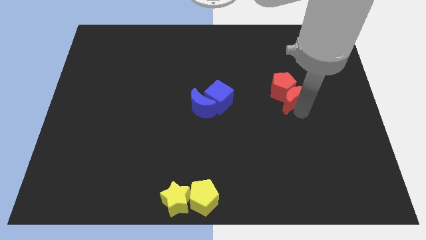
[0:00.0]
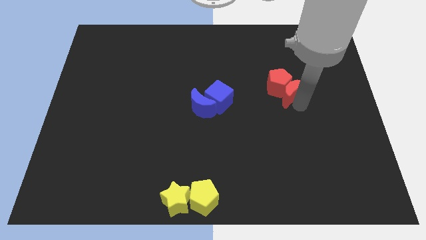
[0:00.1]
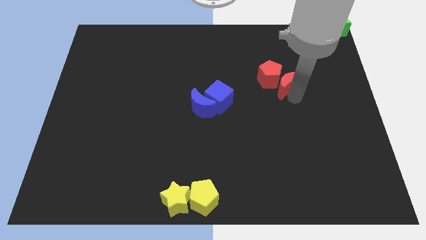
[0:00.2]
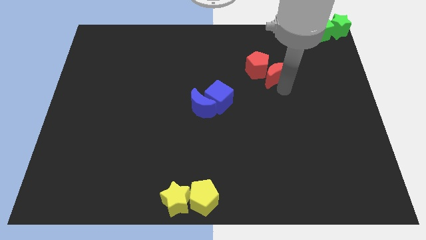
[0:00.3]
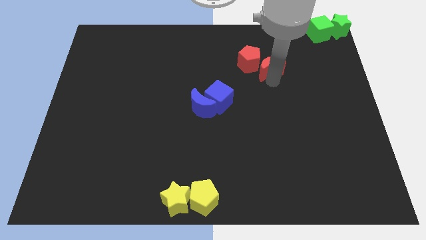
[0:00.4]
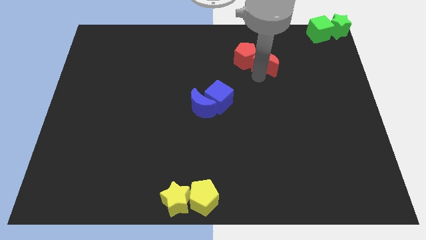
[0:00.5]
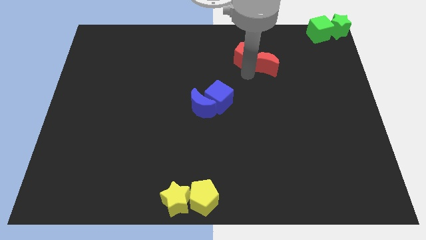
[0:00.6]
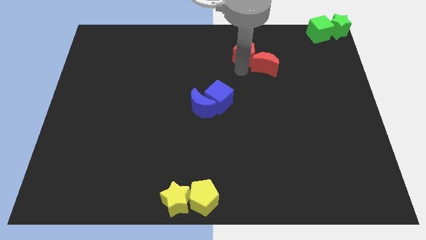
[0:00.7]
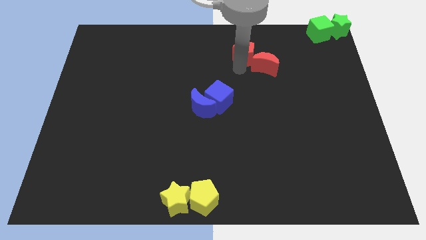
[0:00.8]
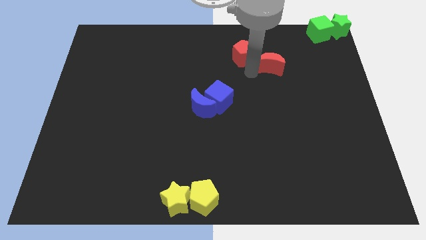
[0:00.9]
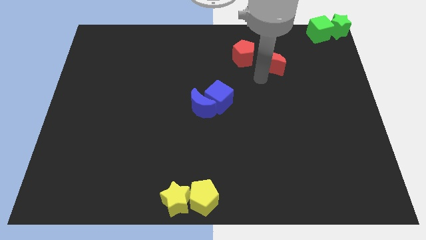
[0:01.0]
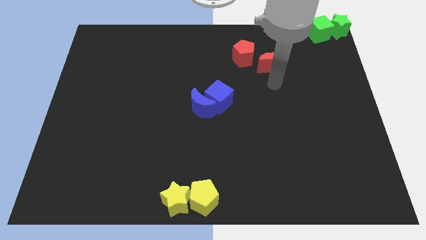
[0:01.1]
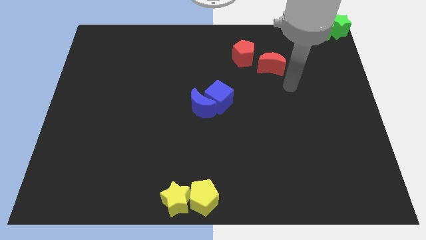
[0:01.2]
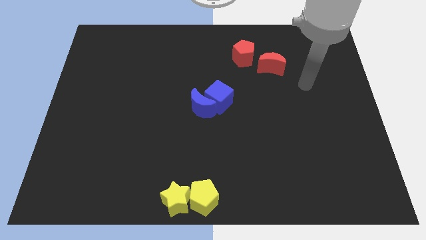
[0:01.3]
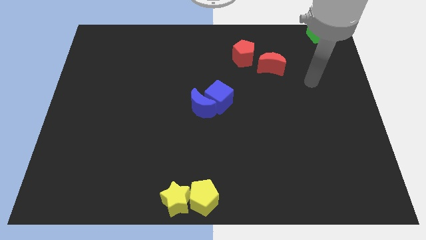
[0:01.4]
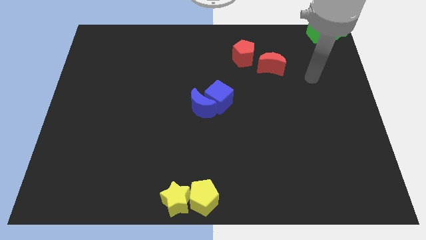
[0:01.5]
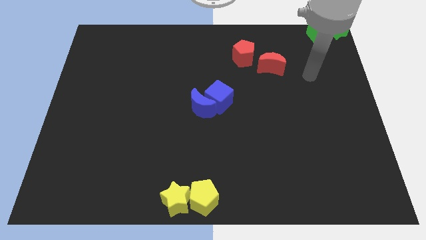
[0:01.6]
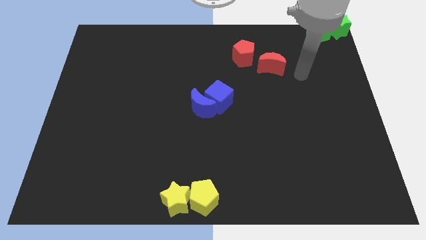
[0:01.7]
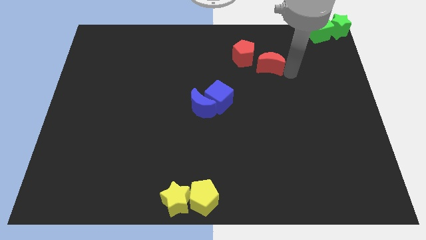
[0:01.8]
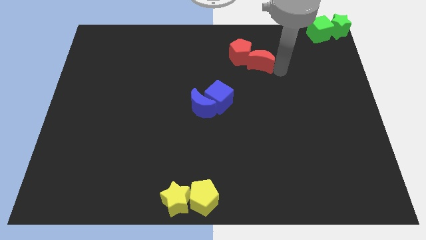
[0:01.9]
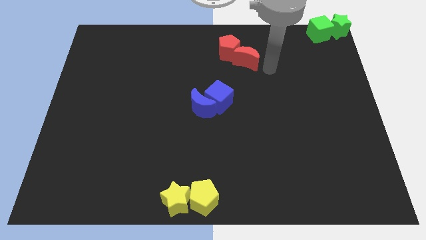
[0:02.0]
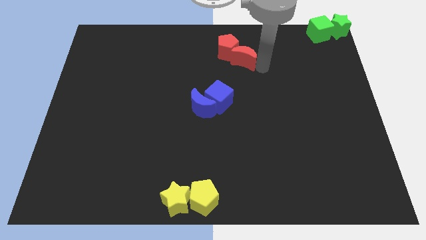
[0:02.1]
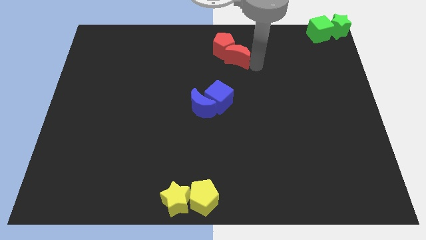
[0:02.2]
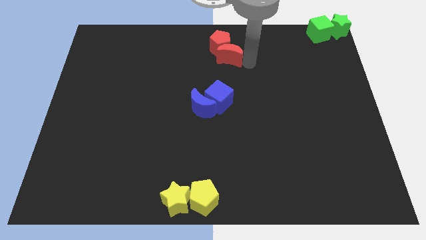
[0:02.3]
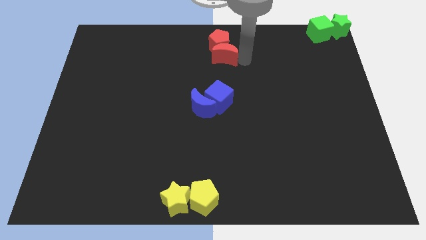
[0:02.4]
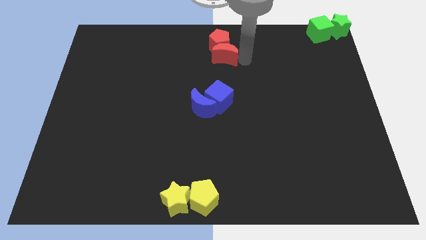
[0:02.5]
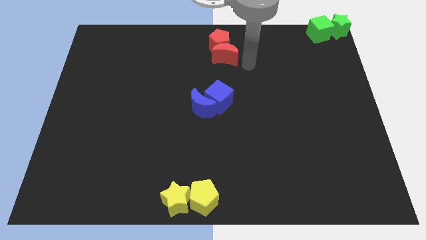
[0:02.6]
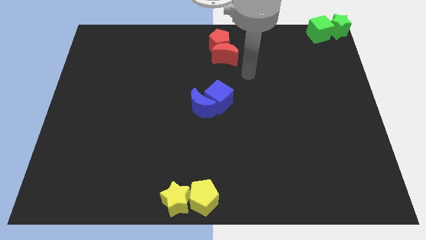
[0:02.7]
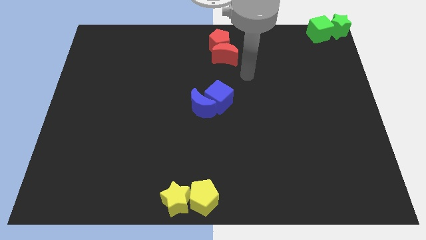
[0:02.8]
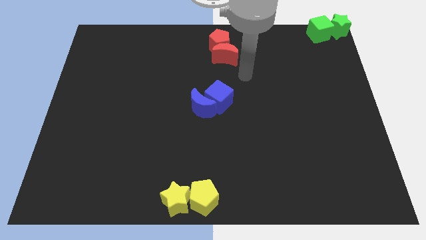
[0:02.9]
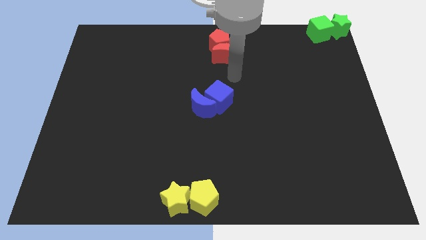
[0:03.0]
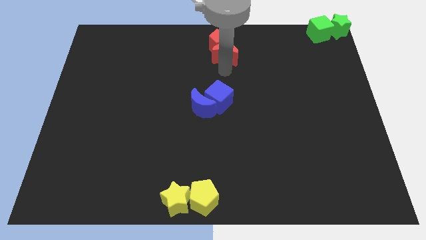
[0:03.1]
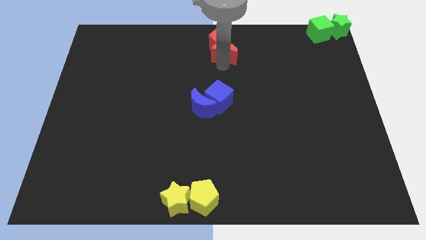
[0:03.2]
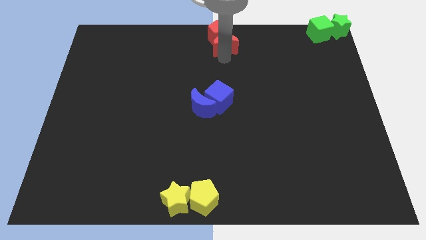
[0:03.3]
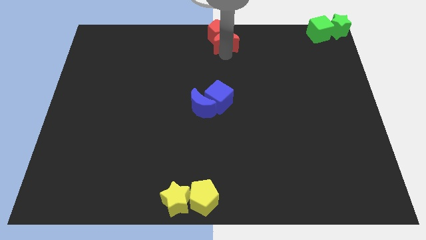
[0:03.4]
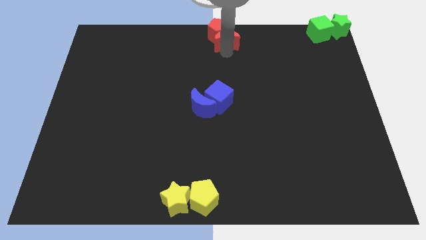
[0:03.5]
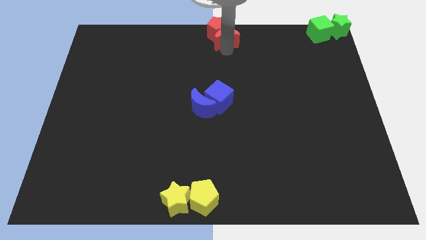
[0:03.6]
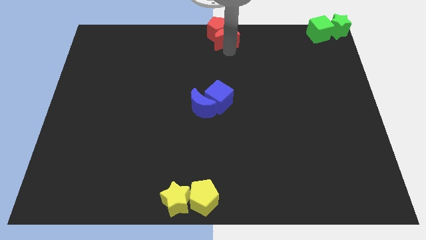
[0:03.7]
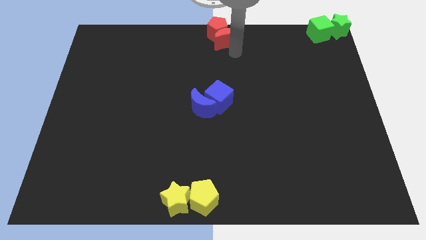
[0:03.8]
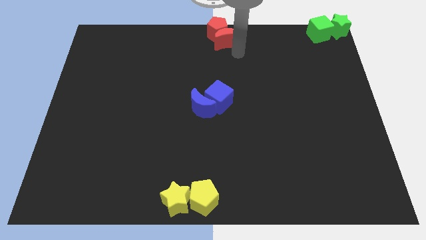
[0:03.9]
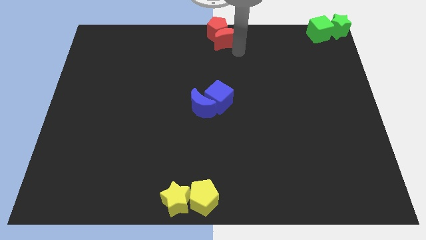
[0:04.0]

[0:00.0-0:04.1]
push the red crescent along with red pentagon to the top center of the board

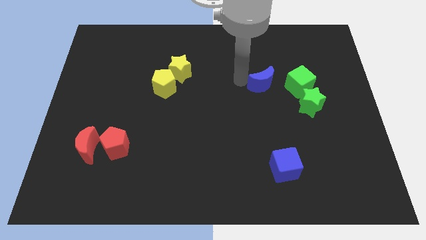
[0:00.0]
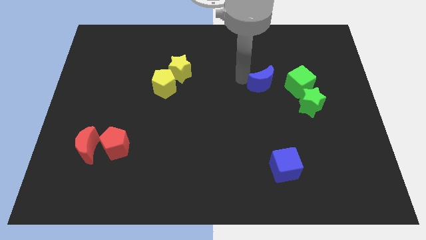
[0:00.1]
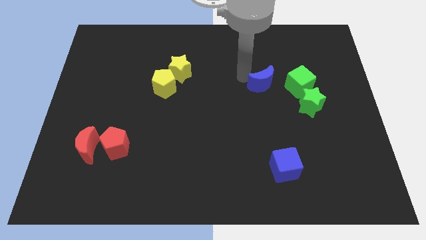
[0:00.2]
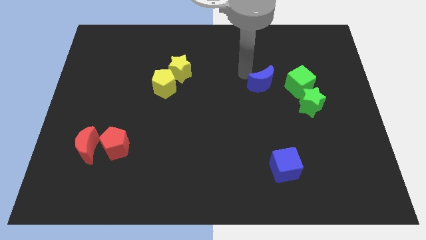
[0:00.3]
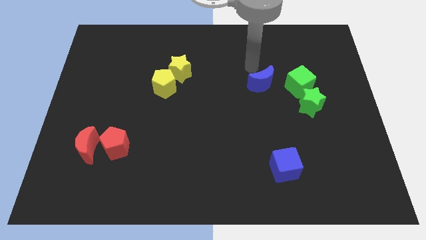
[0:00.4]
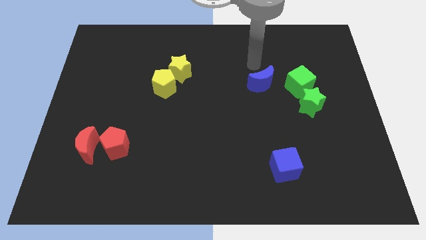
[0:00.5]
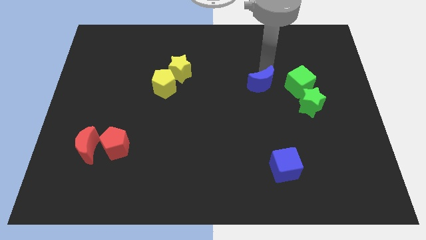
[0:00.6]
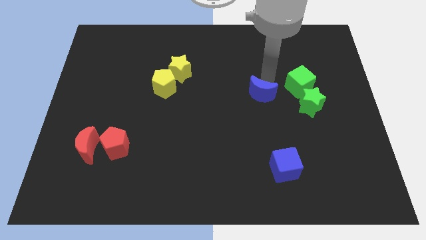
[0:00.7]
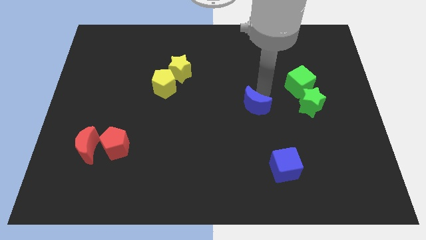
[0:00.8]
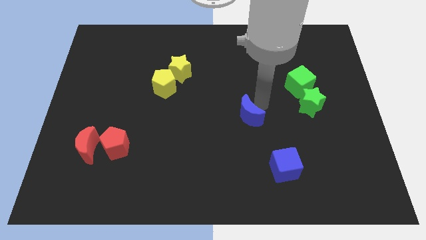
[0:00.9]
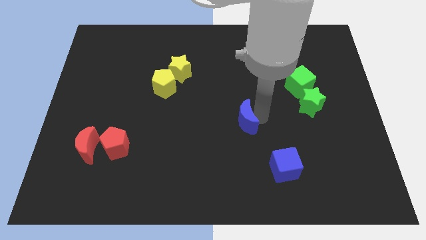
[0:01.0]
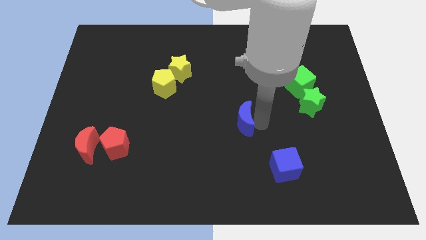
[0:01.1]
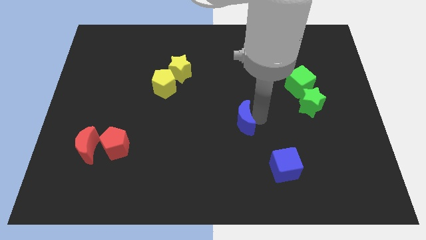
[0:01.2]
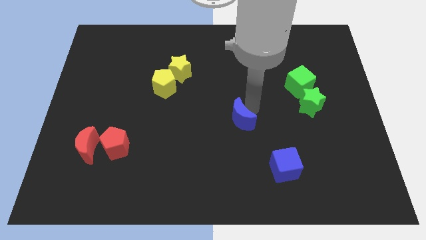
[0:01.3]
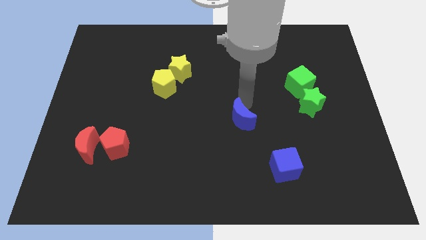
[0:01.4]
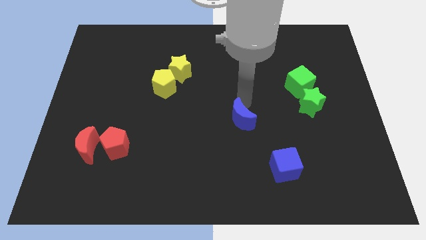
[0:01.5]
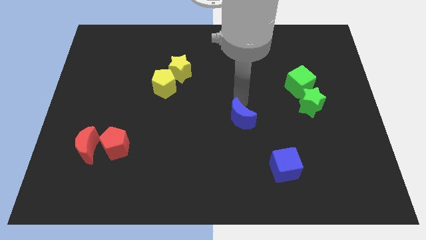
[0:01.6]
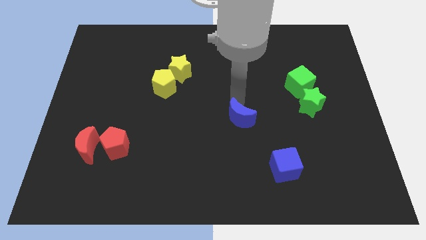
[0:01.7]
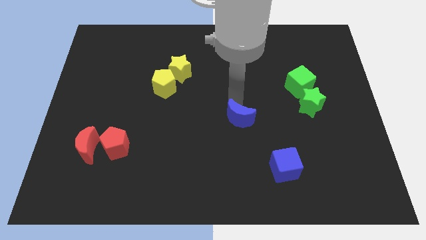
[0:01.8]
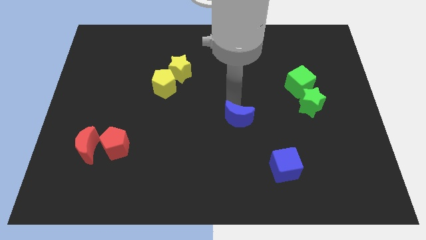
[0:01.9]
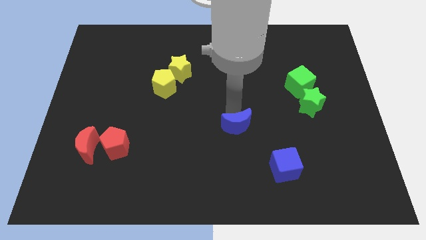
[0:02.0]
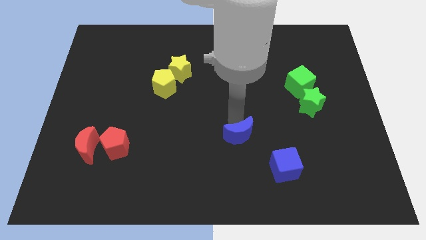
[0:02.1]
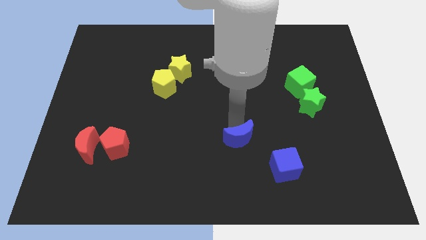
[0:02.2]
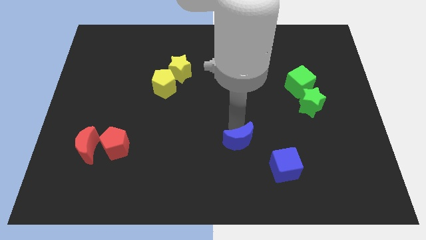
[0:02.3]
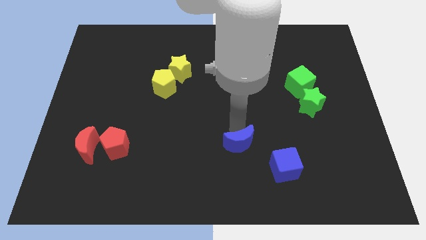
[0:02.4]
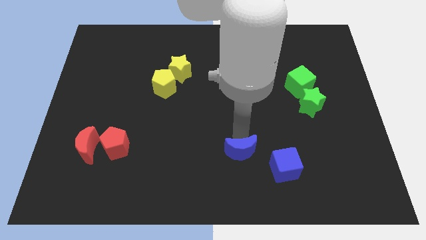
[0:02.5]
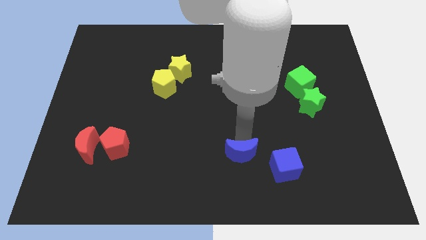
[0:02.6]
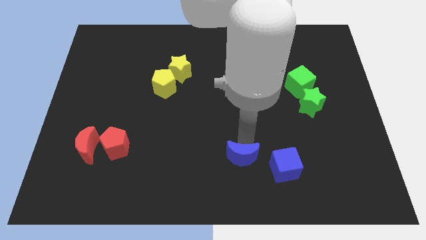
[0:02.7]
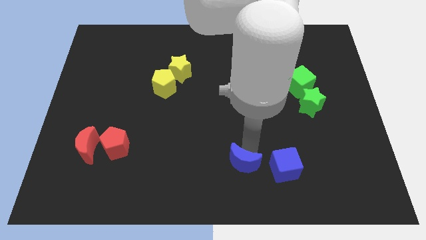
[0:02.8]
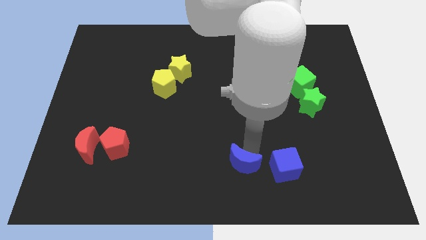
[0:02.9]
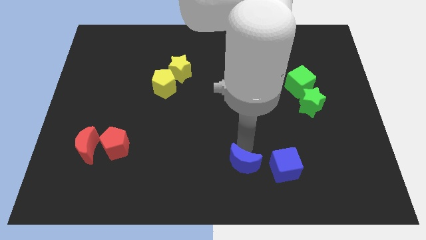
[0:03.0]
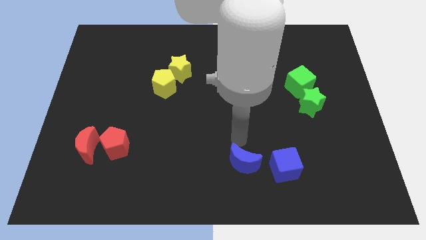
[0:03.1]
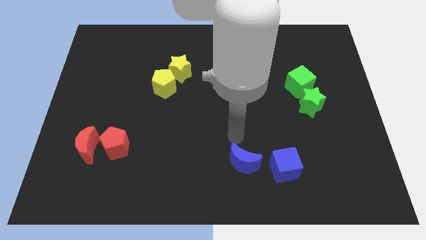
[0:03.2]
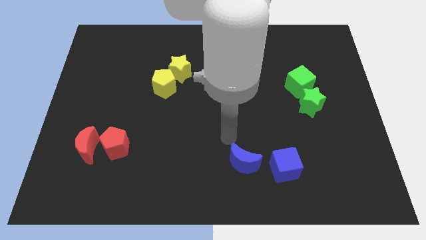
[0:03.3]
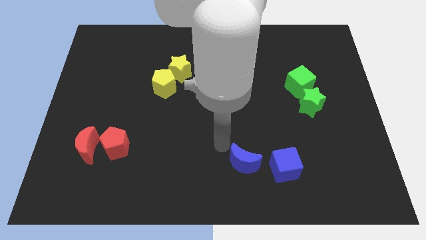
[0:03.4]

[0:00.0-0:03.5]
push the blue moon to the left of blue cube

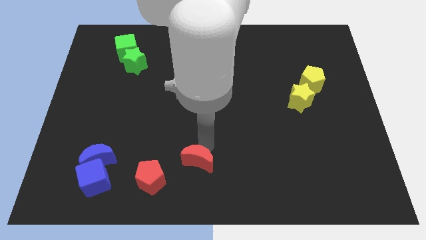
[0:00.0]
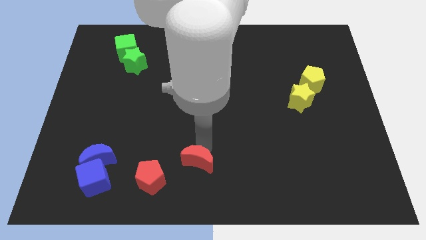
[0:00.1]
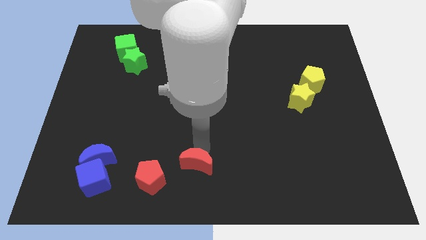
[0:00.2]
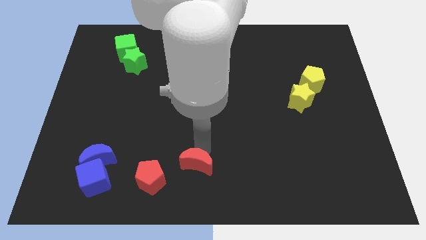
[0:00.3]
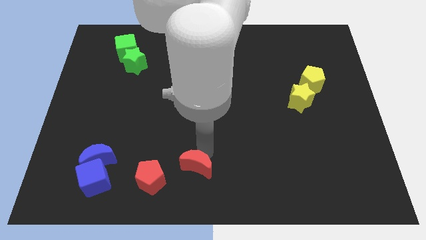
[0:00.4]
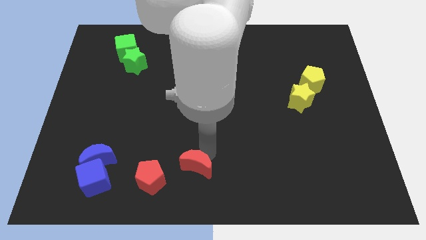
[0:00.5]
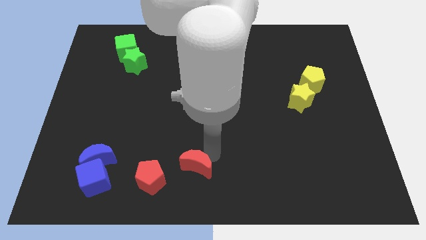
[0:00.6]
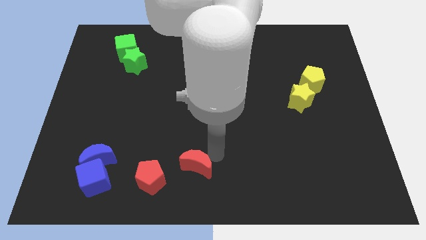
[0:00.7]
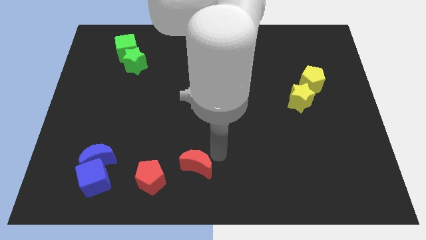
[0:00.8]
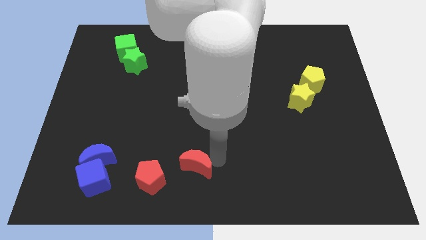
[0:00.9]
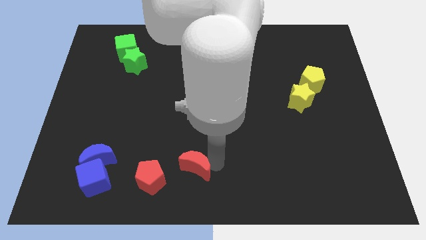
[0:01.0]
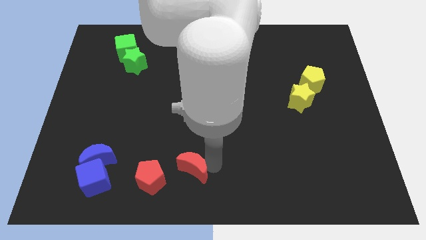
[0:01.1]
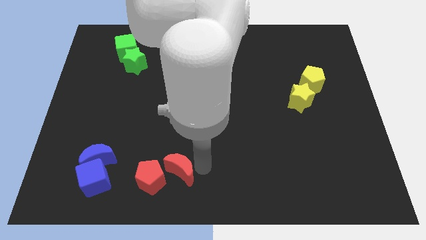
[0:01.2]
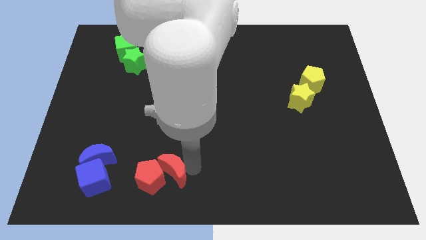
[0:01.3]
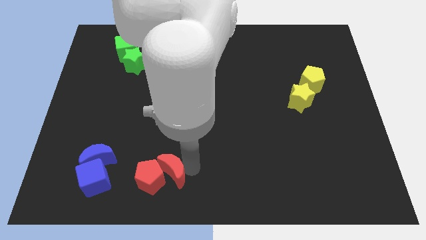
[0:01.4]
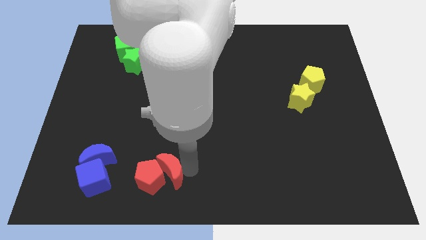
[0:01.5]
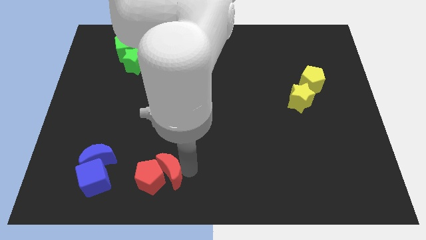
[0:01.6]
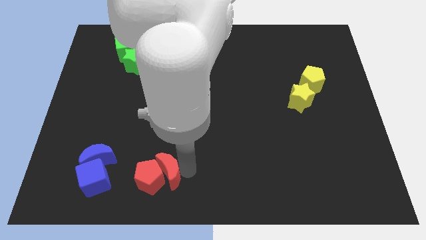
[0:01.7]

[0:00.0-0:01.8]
push the red crescent into the red pentagon
